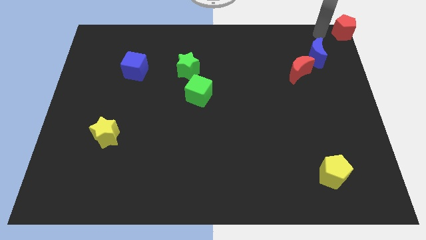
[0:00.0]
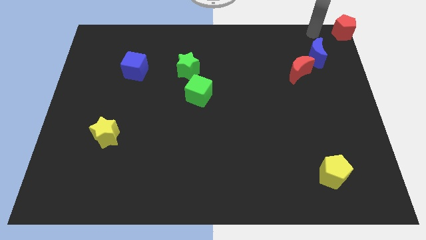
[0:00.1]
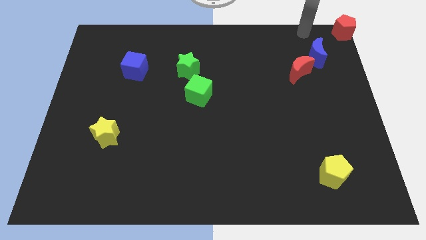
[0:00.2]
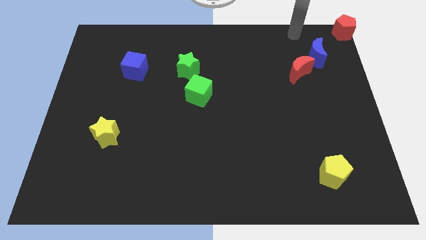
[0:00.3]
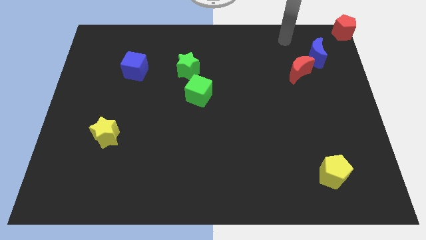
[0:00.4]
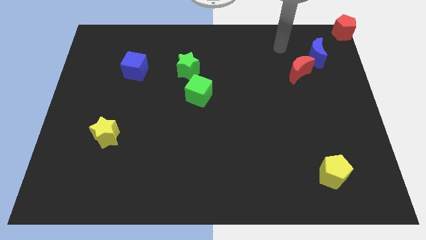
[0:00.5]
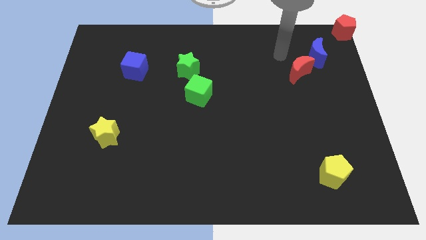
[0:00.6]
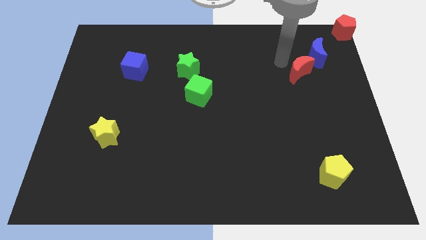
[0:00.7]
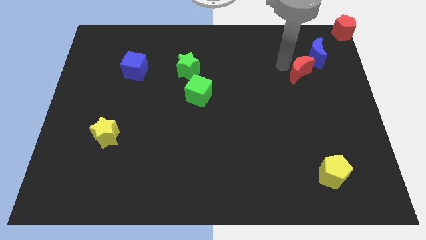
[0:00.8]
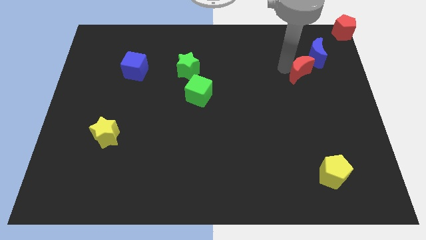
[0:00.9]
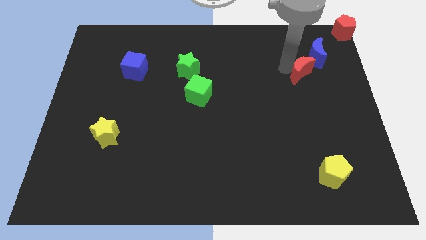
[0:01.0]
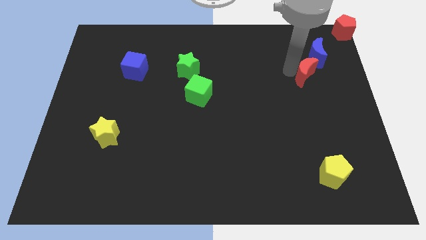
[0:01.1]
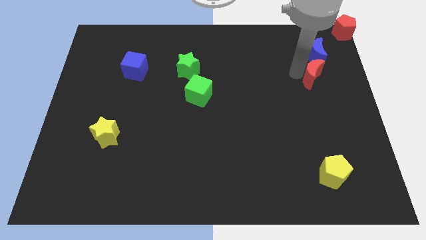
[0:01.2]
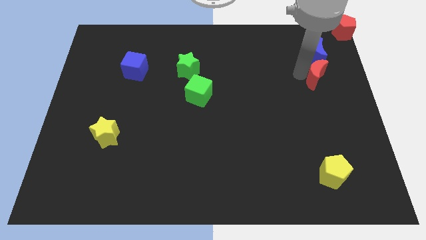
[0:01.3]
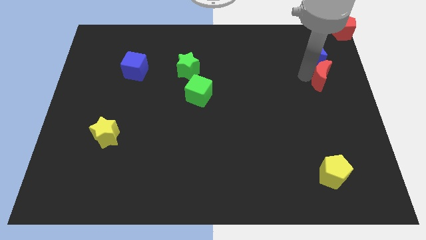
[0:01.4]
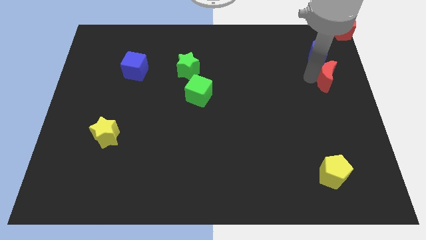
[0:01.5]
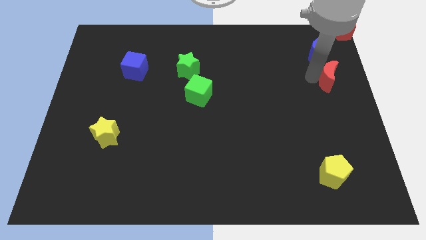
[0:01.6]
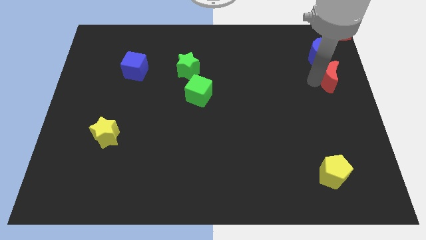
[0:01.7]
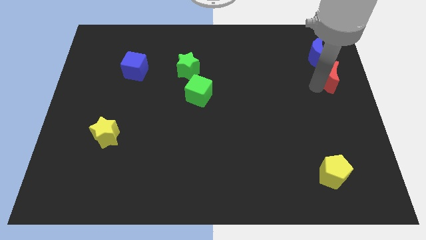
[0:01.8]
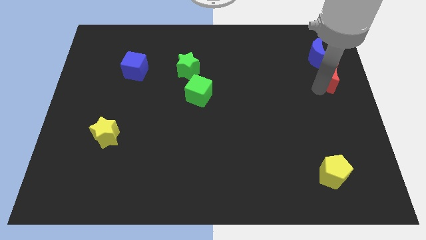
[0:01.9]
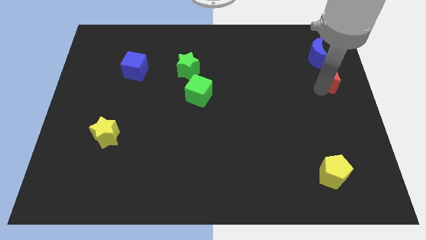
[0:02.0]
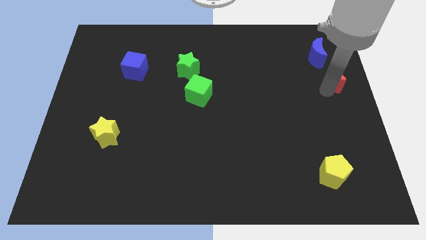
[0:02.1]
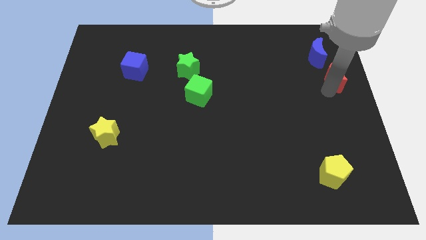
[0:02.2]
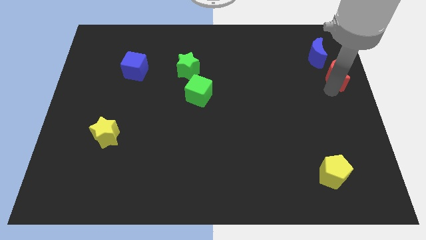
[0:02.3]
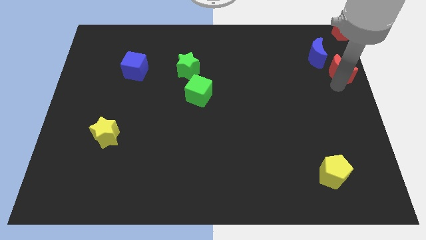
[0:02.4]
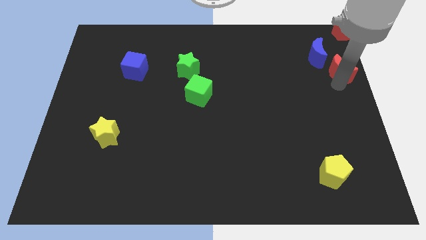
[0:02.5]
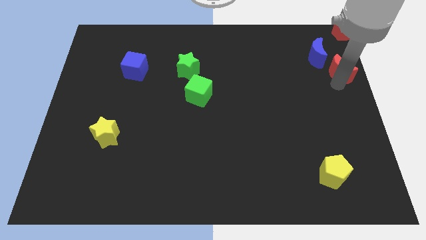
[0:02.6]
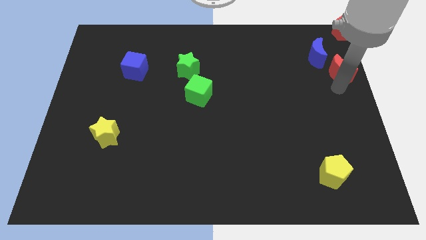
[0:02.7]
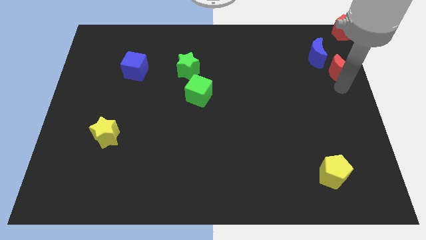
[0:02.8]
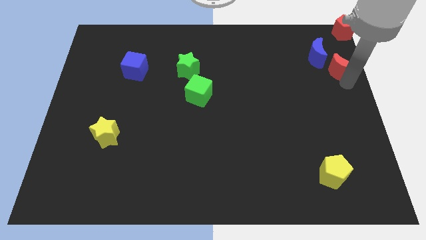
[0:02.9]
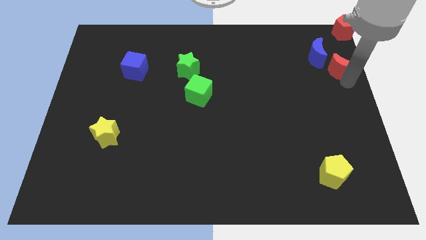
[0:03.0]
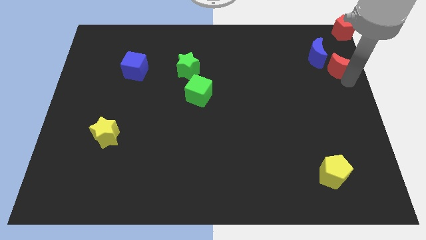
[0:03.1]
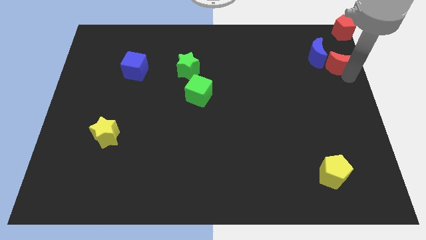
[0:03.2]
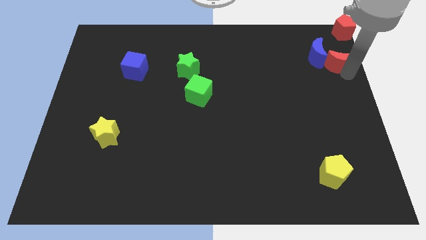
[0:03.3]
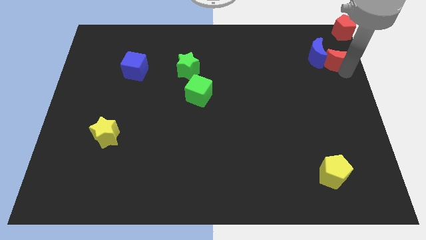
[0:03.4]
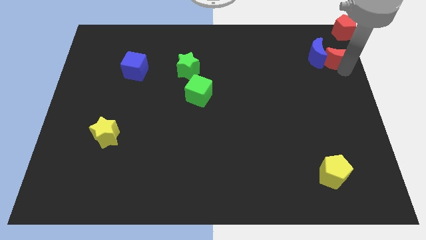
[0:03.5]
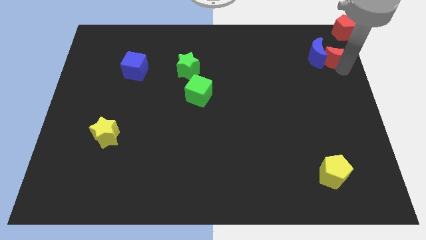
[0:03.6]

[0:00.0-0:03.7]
move the red moon to the right of the blue moon

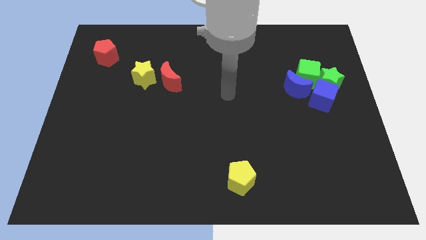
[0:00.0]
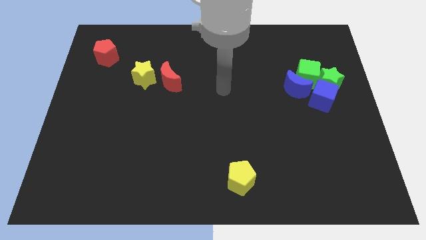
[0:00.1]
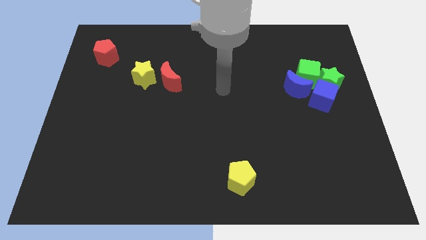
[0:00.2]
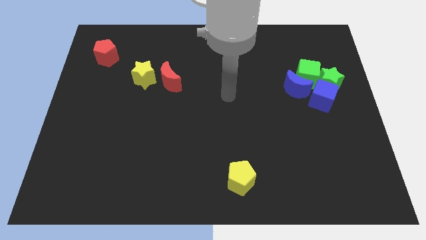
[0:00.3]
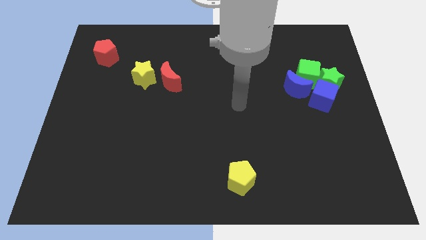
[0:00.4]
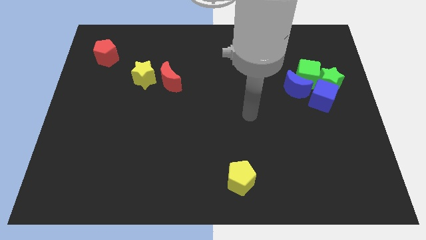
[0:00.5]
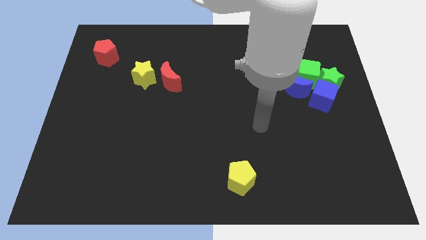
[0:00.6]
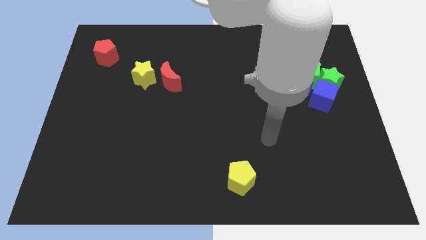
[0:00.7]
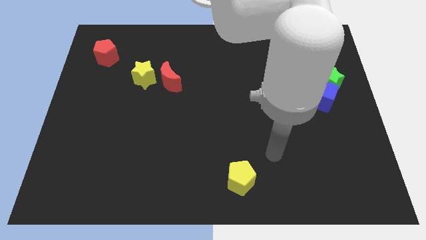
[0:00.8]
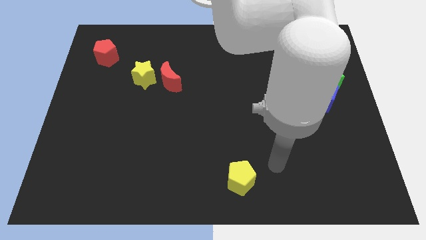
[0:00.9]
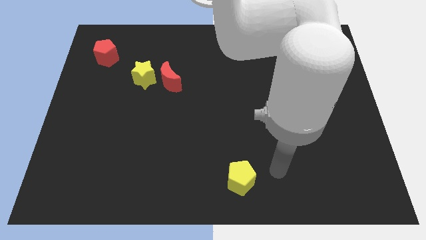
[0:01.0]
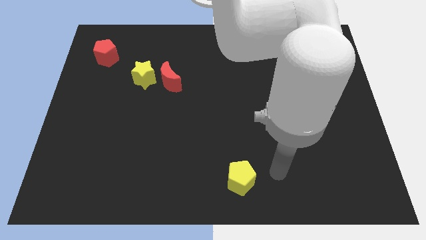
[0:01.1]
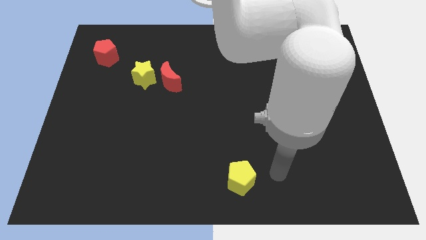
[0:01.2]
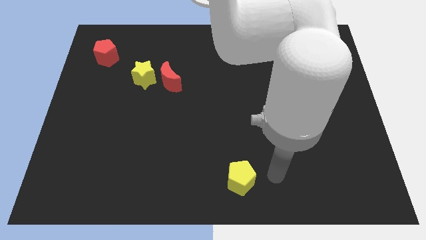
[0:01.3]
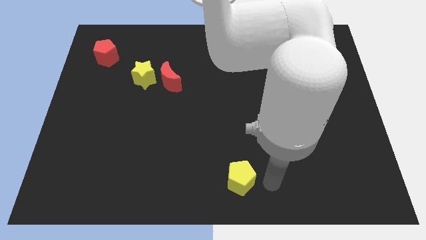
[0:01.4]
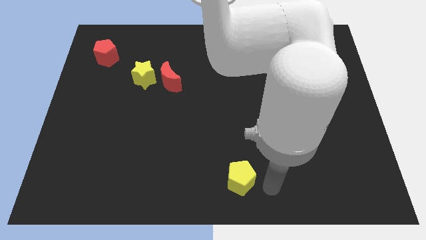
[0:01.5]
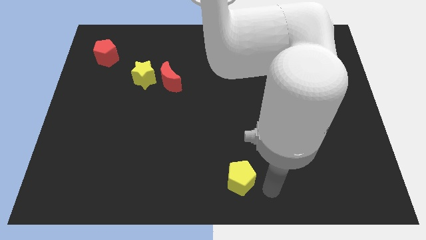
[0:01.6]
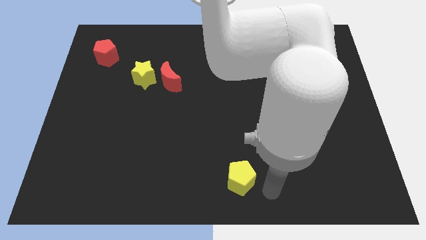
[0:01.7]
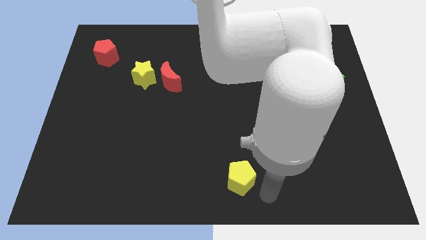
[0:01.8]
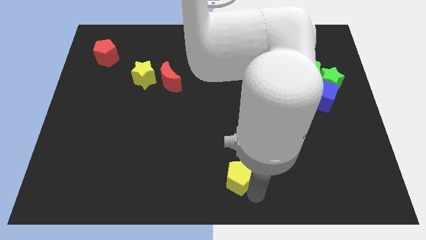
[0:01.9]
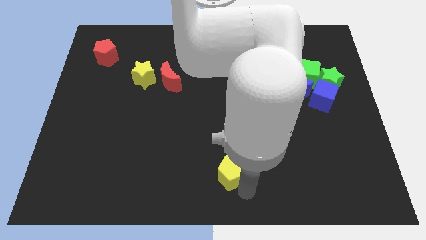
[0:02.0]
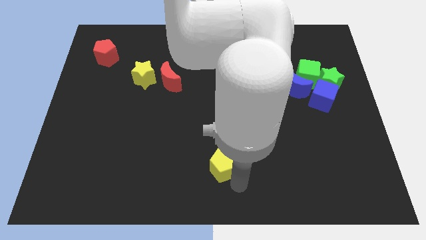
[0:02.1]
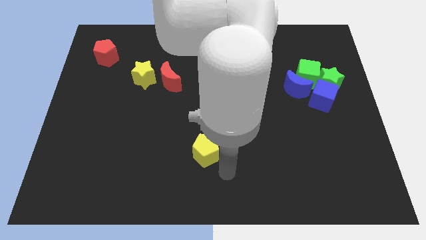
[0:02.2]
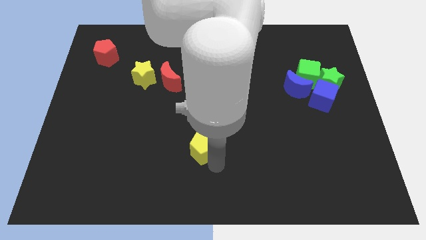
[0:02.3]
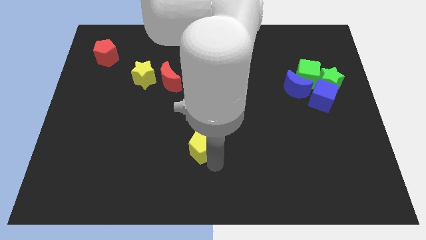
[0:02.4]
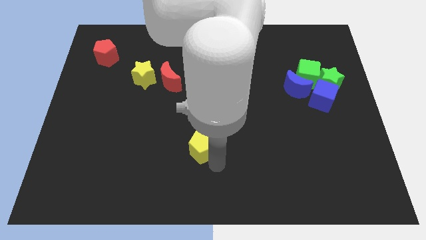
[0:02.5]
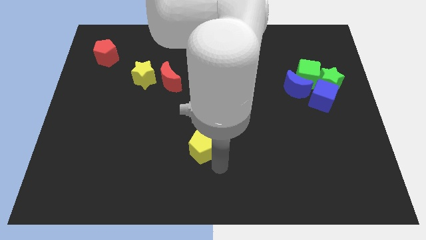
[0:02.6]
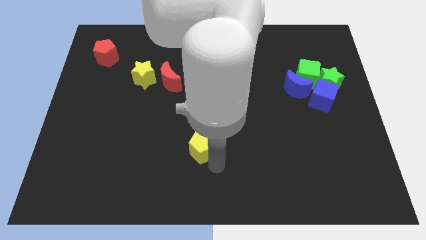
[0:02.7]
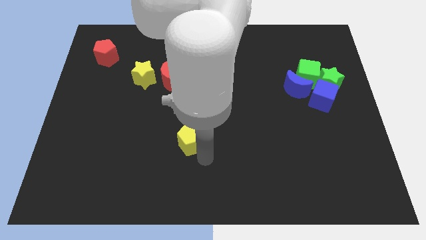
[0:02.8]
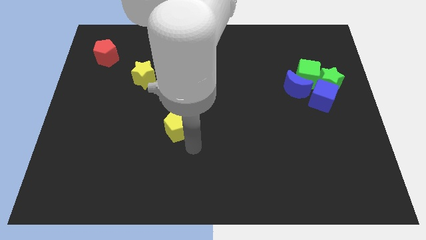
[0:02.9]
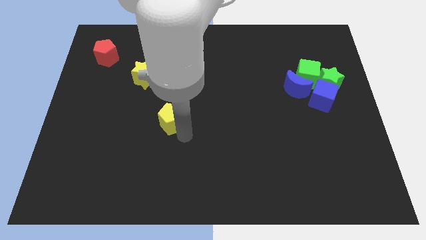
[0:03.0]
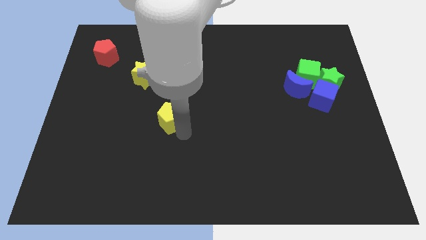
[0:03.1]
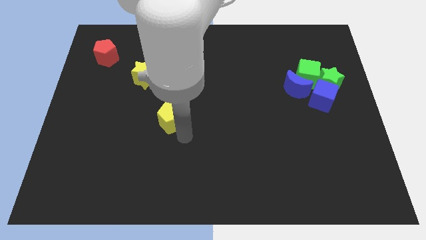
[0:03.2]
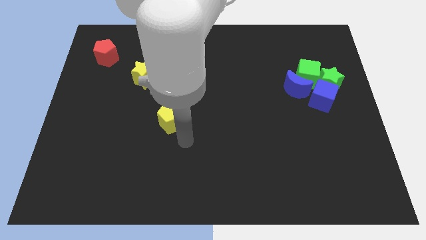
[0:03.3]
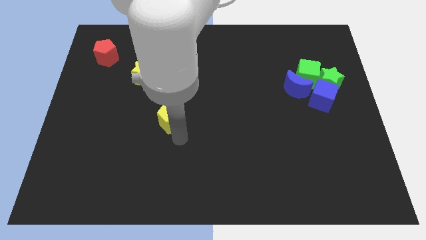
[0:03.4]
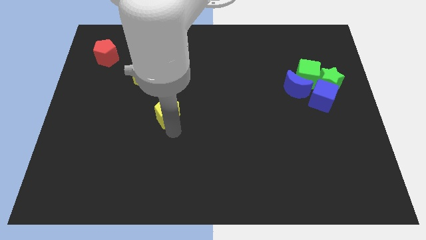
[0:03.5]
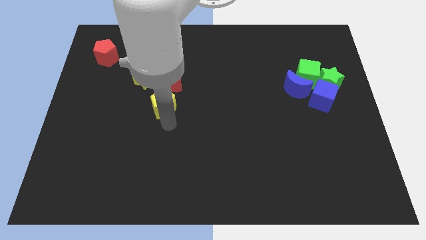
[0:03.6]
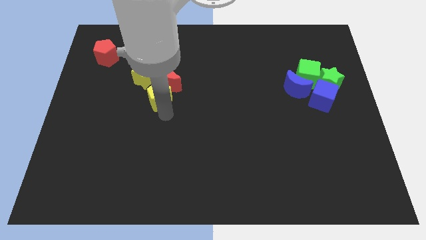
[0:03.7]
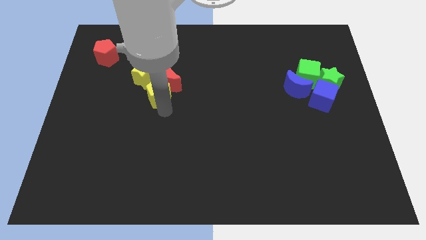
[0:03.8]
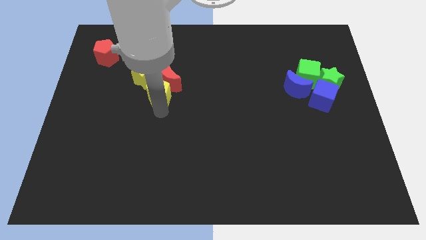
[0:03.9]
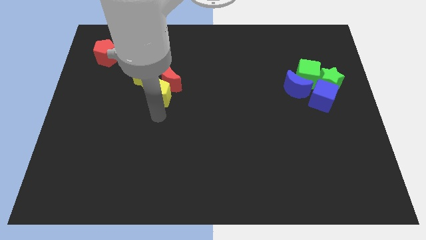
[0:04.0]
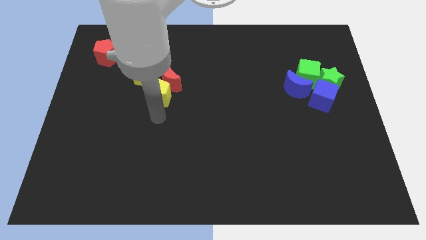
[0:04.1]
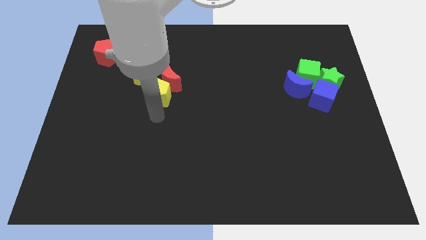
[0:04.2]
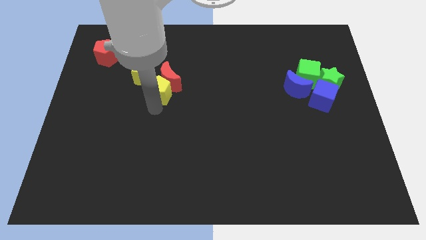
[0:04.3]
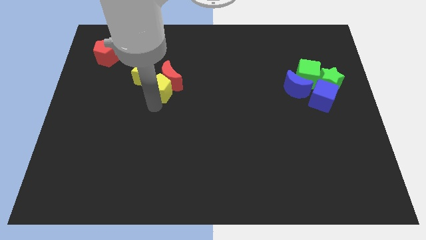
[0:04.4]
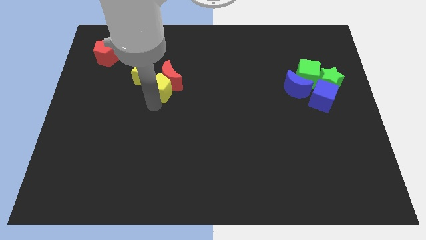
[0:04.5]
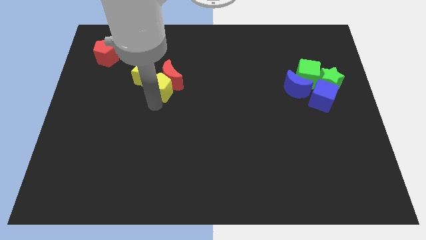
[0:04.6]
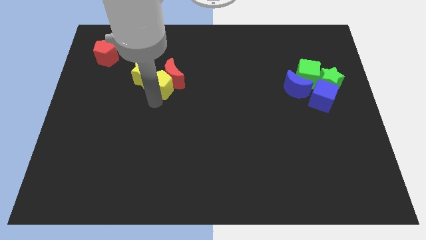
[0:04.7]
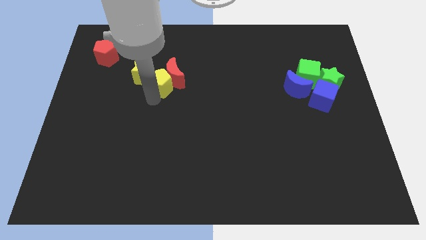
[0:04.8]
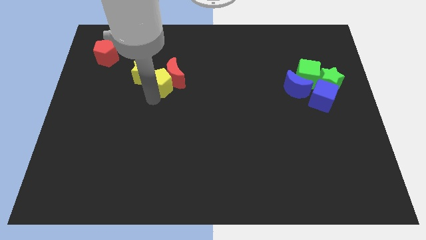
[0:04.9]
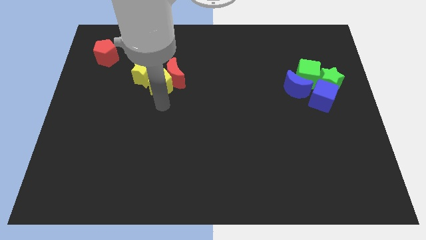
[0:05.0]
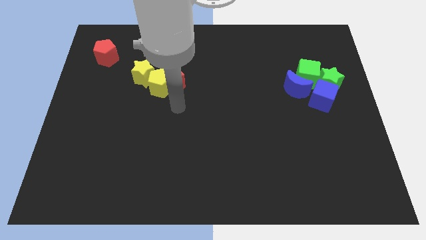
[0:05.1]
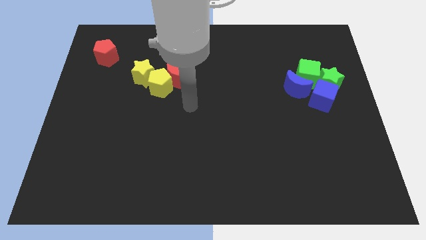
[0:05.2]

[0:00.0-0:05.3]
move the yellow pentagon into the red crescent and yellow star
